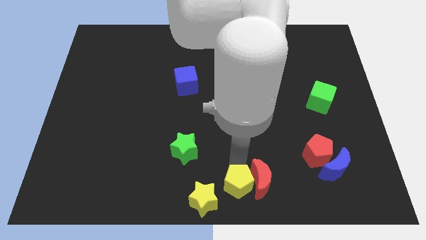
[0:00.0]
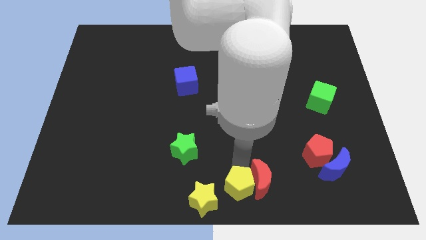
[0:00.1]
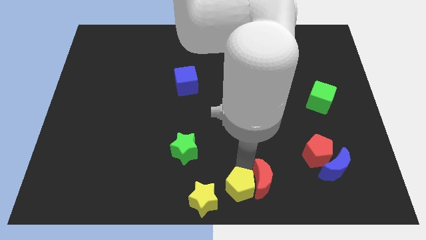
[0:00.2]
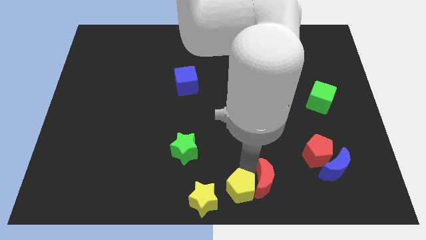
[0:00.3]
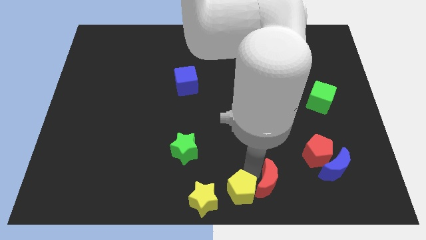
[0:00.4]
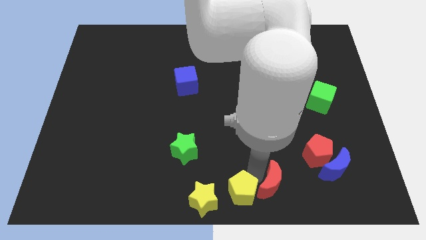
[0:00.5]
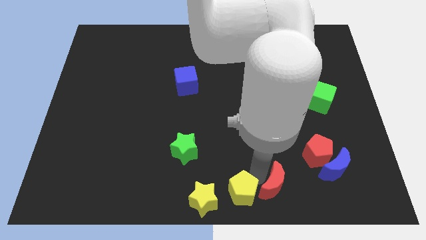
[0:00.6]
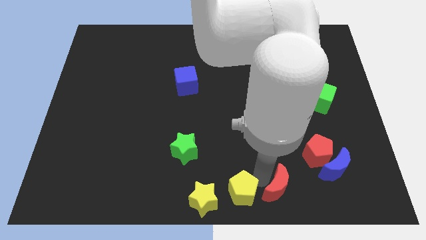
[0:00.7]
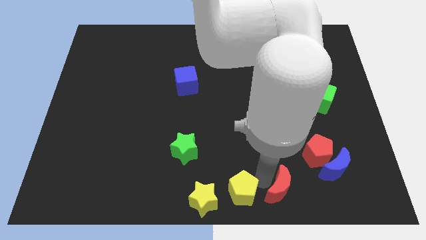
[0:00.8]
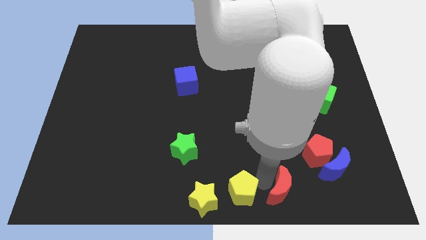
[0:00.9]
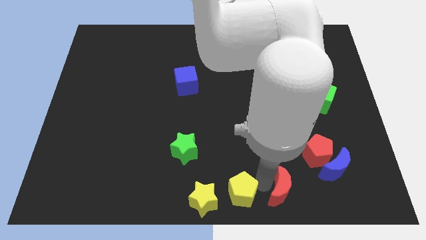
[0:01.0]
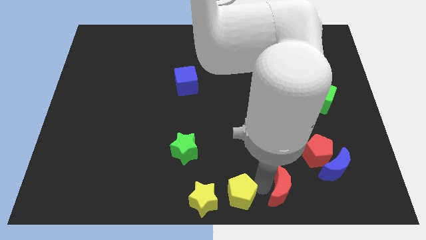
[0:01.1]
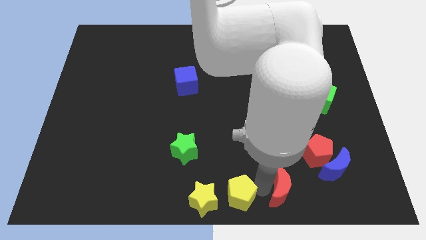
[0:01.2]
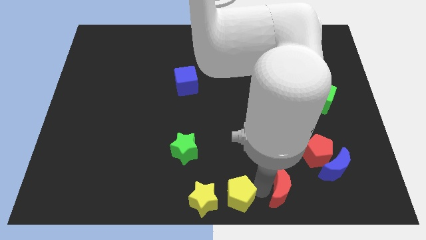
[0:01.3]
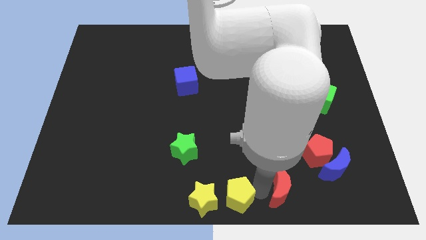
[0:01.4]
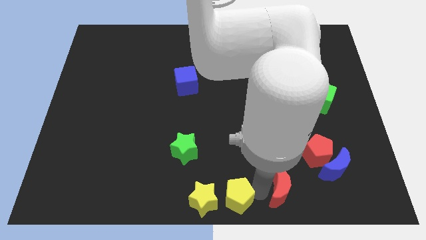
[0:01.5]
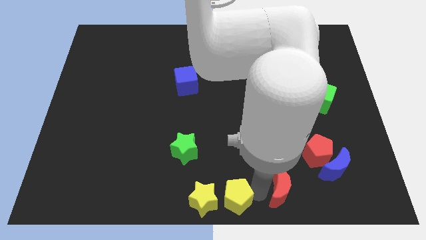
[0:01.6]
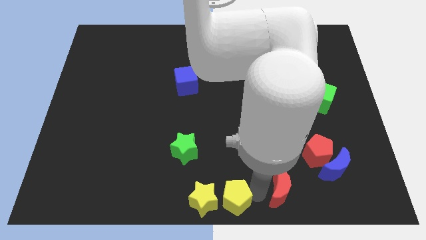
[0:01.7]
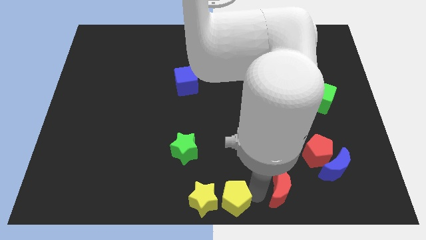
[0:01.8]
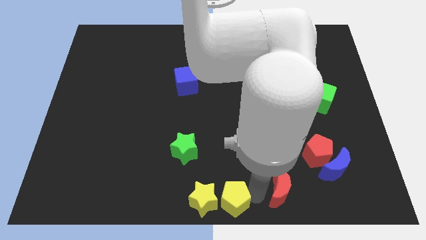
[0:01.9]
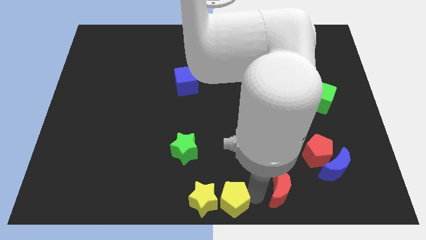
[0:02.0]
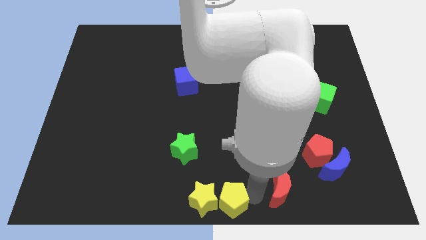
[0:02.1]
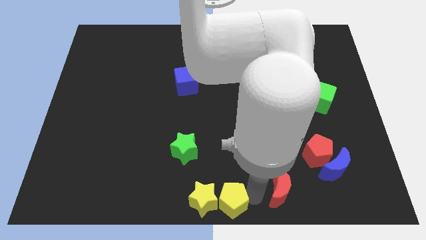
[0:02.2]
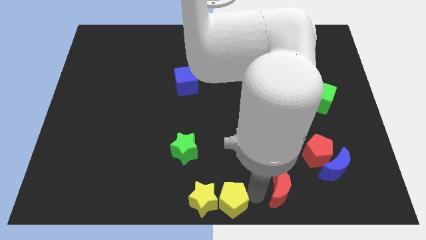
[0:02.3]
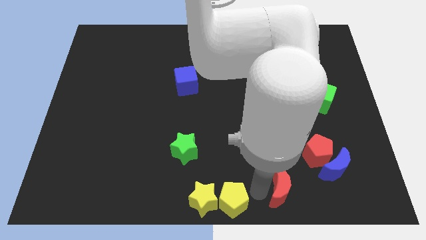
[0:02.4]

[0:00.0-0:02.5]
move the yellow pentagon right to the yellow star

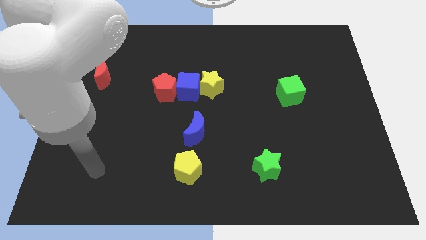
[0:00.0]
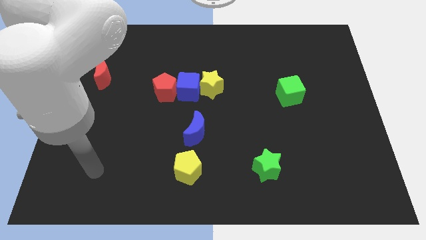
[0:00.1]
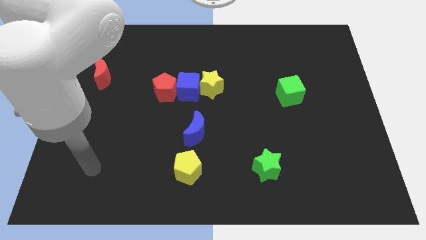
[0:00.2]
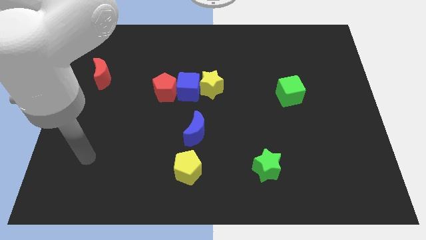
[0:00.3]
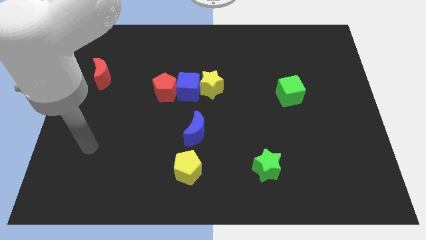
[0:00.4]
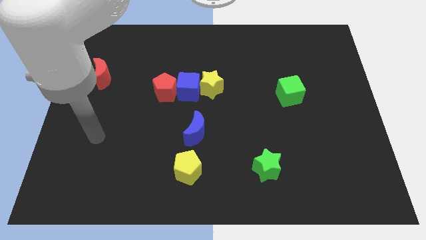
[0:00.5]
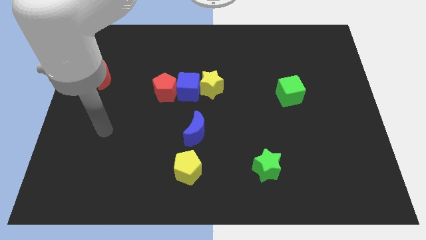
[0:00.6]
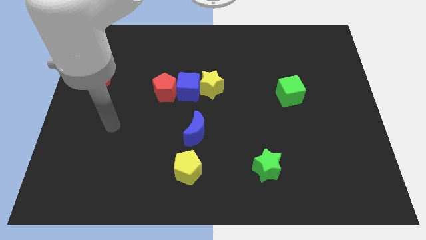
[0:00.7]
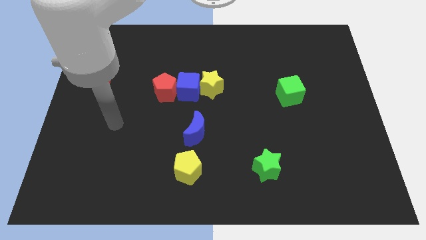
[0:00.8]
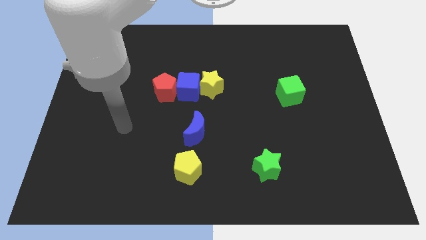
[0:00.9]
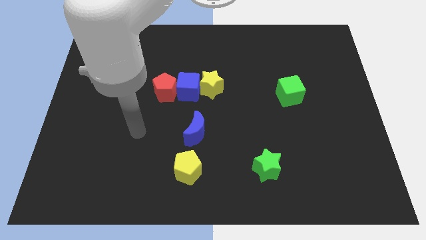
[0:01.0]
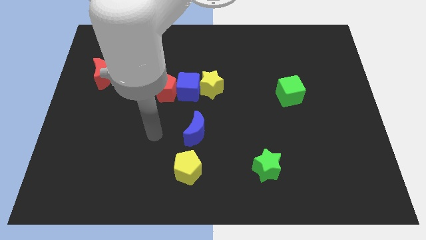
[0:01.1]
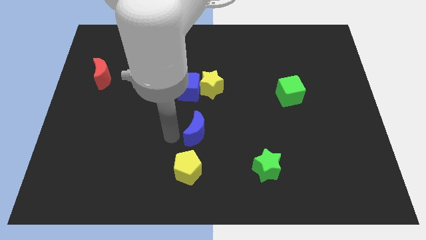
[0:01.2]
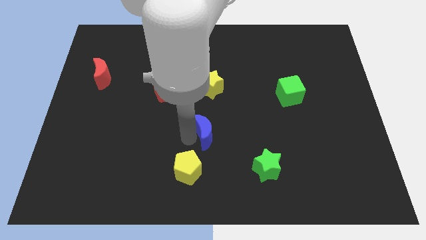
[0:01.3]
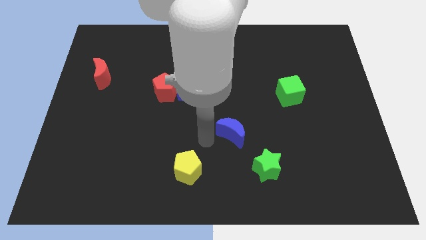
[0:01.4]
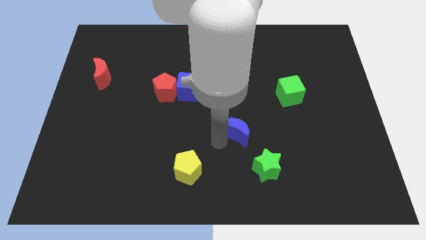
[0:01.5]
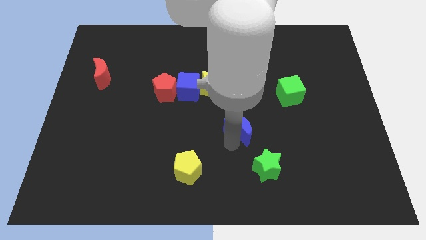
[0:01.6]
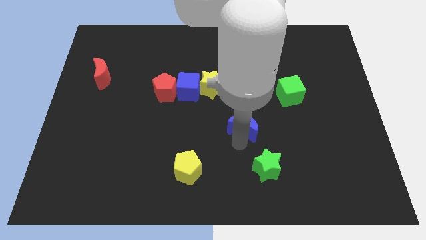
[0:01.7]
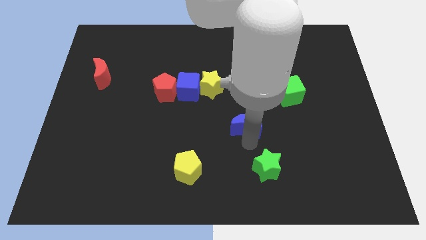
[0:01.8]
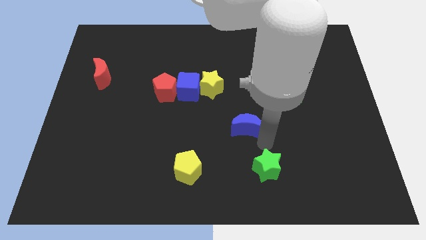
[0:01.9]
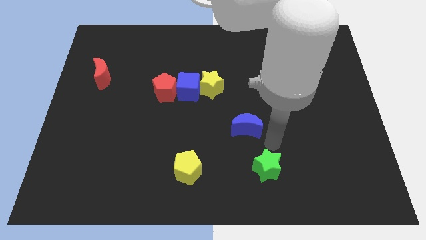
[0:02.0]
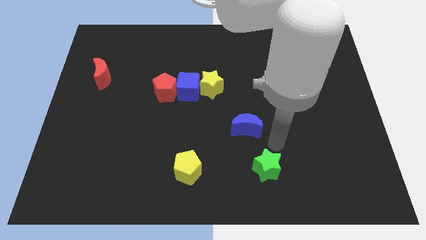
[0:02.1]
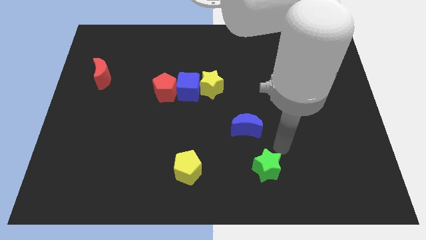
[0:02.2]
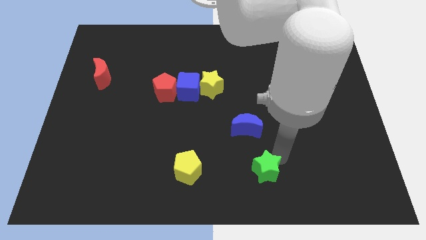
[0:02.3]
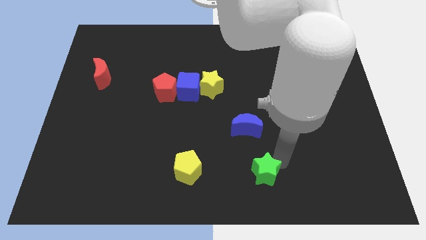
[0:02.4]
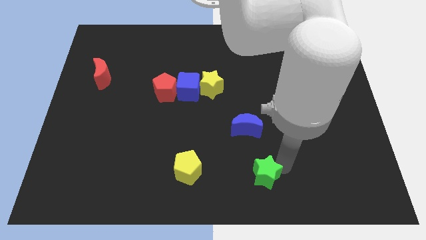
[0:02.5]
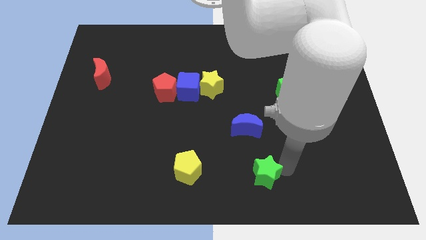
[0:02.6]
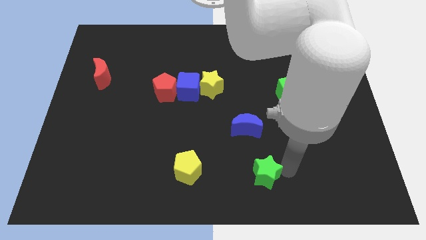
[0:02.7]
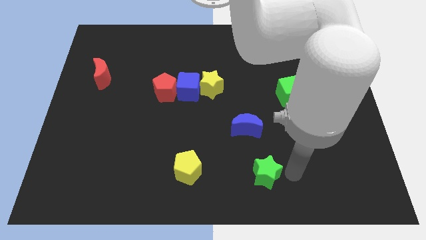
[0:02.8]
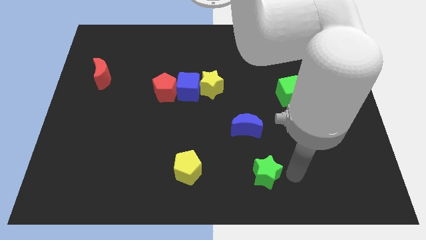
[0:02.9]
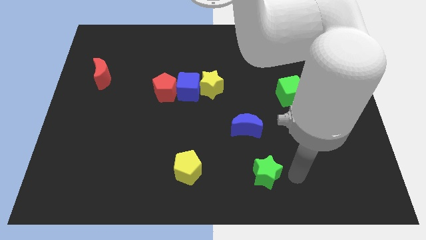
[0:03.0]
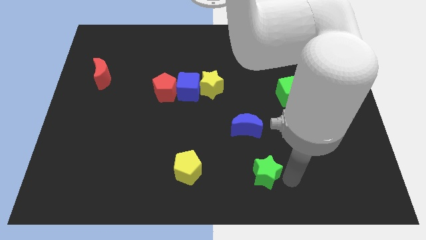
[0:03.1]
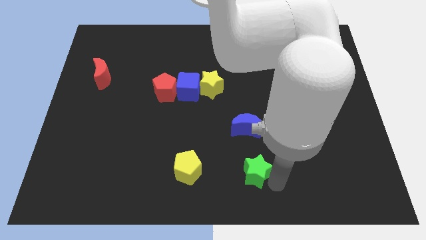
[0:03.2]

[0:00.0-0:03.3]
place green star to the bottom of blue moon

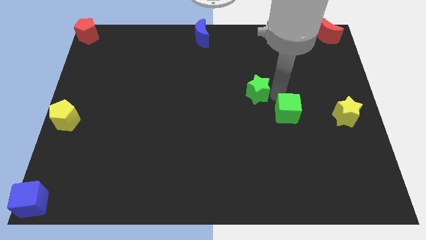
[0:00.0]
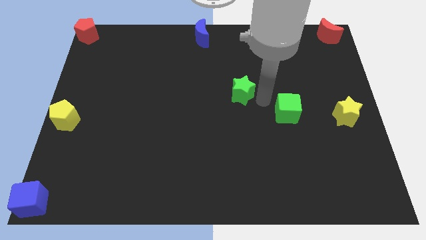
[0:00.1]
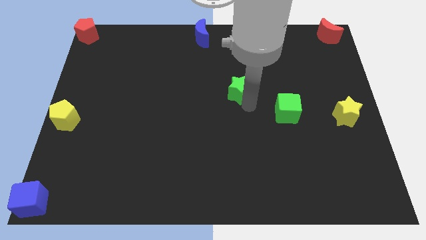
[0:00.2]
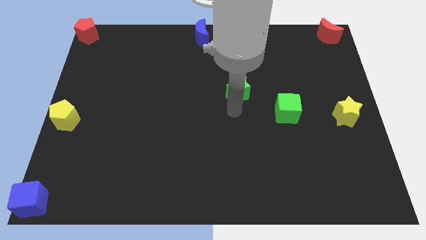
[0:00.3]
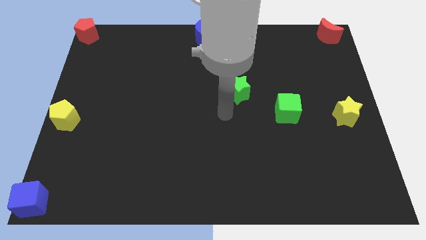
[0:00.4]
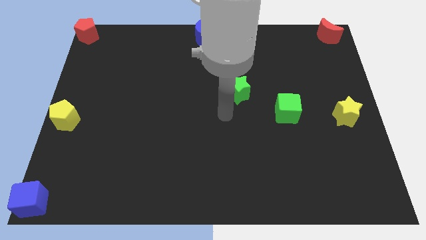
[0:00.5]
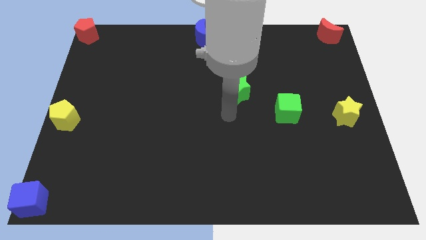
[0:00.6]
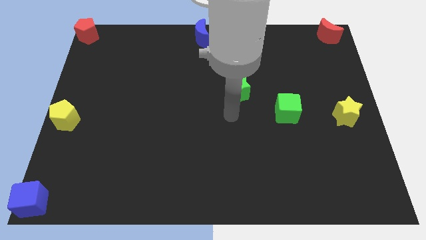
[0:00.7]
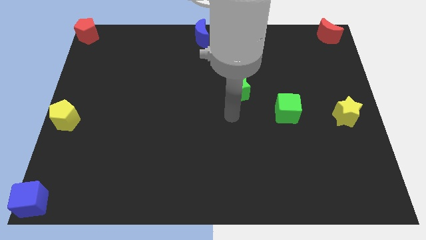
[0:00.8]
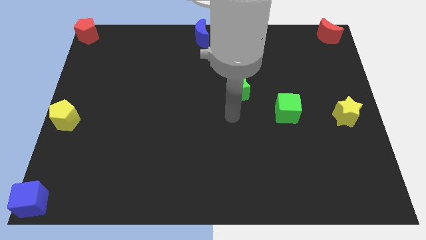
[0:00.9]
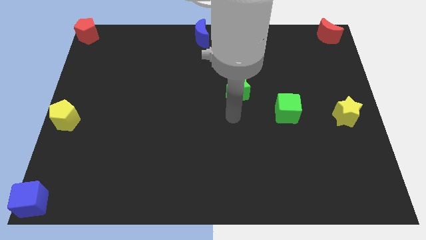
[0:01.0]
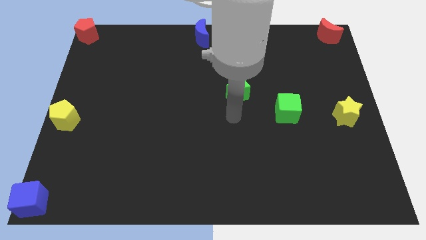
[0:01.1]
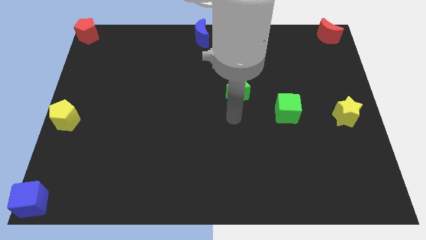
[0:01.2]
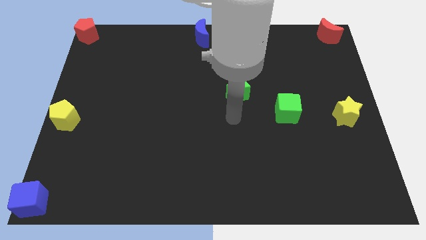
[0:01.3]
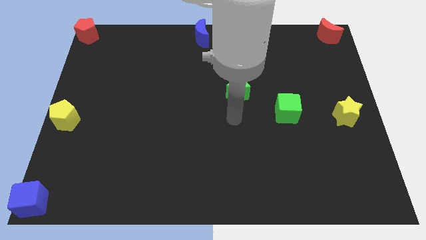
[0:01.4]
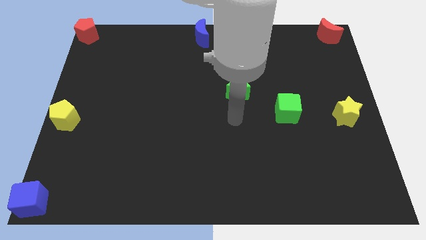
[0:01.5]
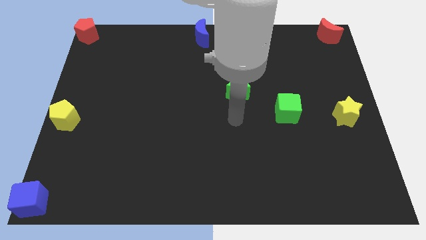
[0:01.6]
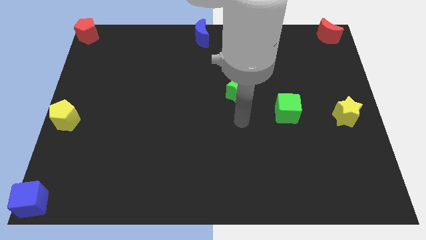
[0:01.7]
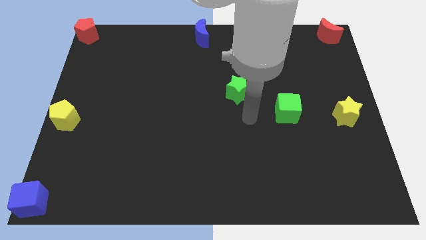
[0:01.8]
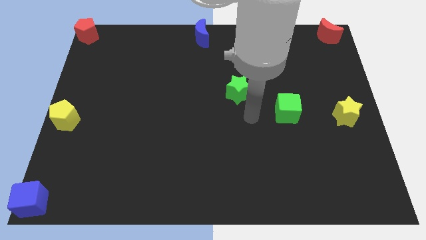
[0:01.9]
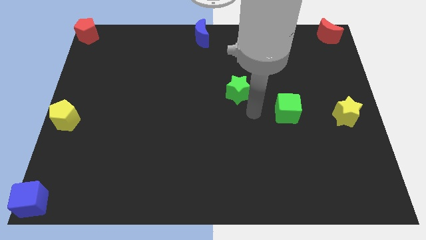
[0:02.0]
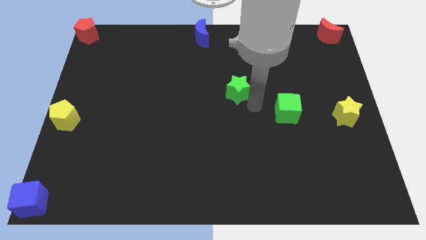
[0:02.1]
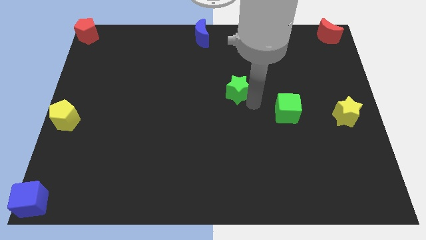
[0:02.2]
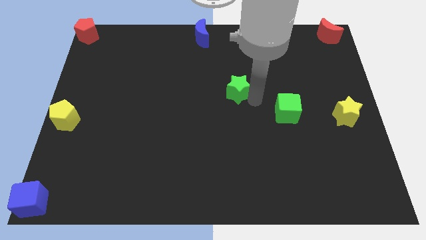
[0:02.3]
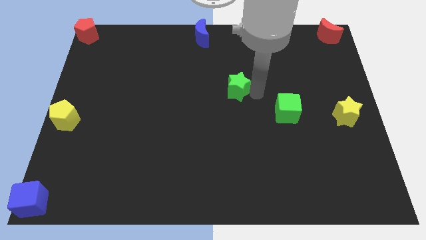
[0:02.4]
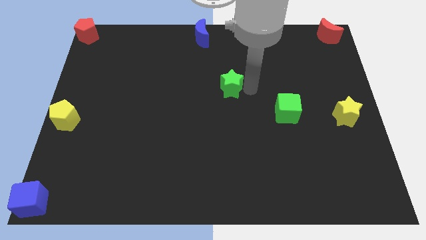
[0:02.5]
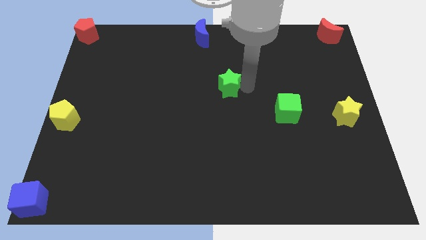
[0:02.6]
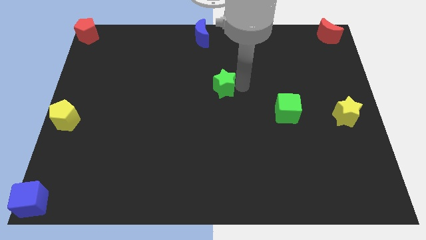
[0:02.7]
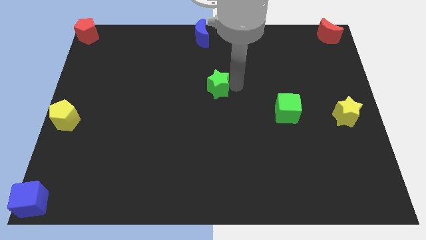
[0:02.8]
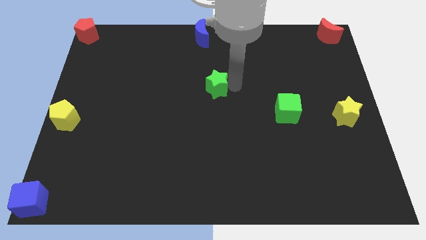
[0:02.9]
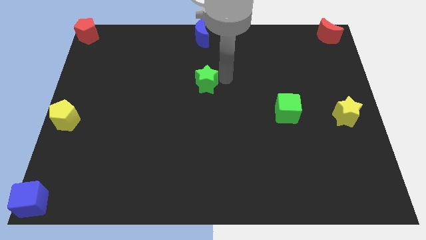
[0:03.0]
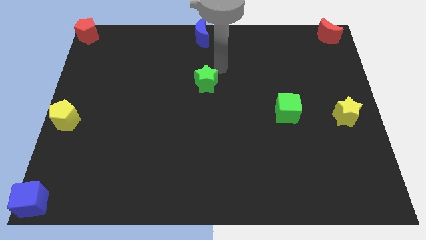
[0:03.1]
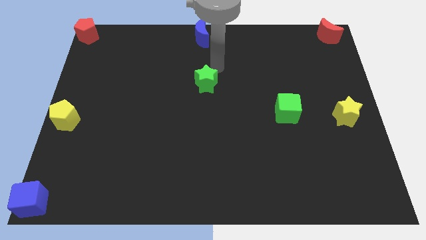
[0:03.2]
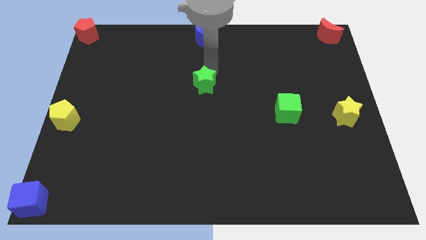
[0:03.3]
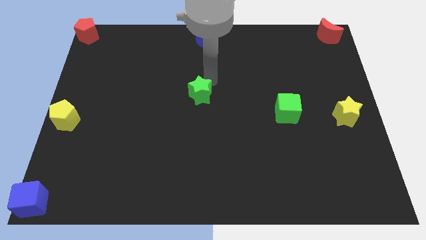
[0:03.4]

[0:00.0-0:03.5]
push green star below blue crescent
